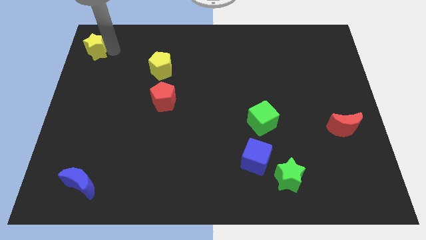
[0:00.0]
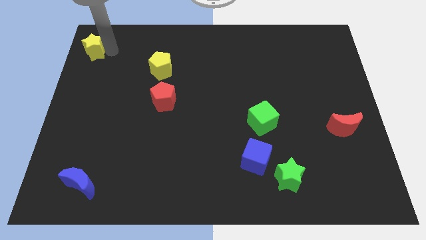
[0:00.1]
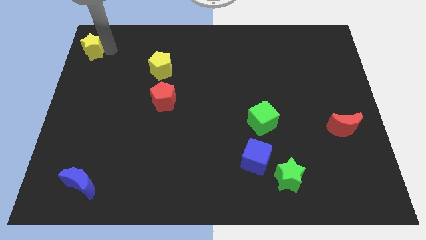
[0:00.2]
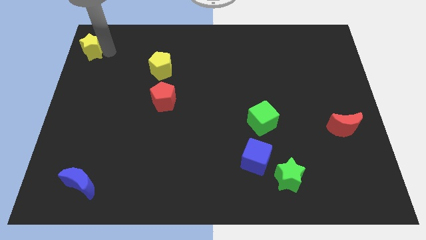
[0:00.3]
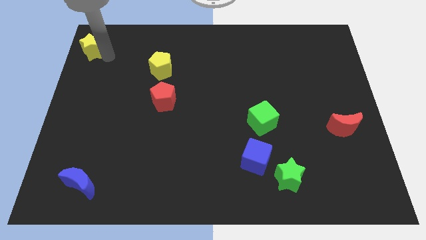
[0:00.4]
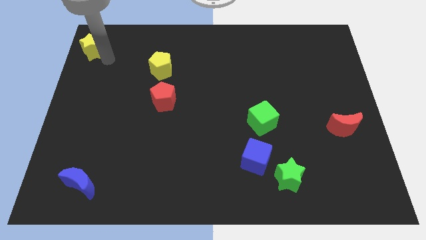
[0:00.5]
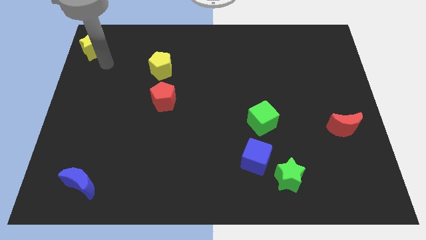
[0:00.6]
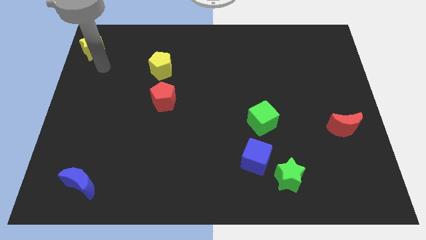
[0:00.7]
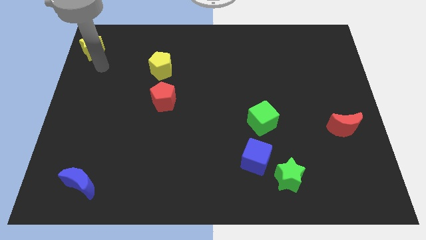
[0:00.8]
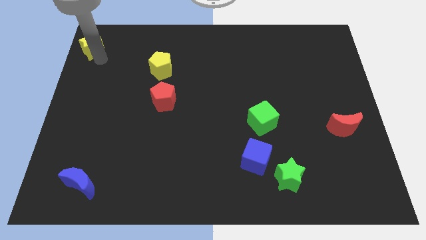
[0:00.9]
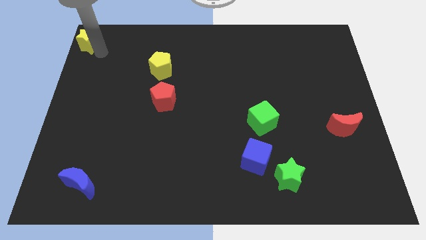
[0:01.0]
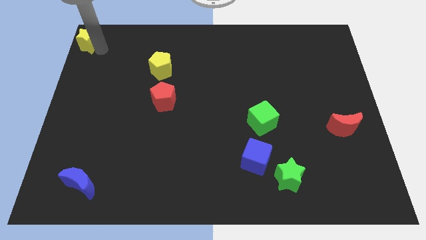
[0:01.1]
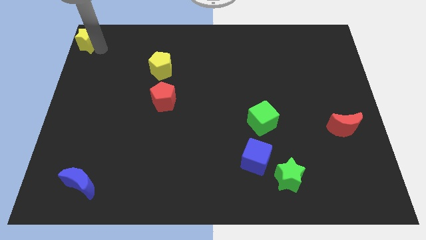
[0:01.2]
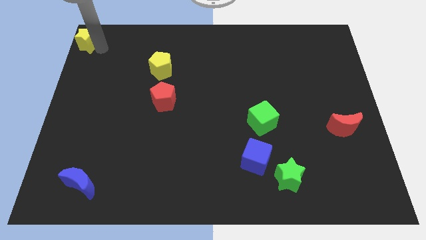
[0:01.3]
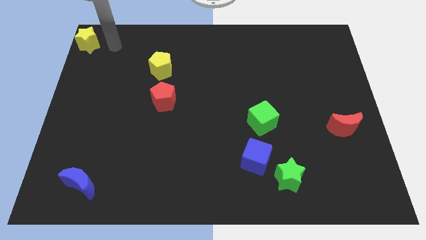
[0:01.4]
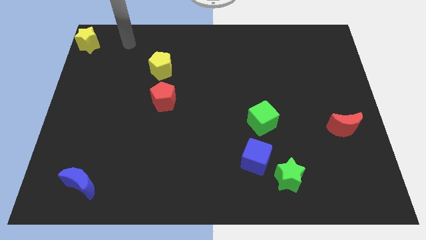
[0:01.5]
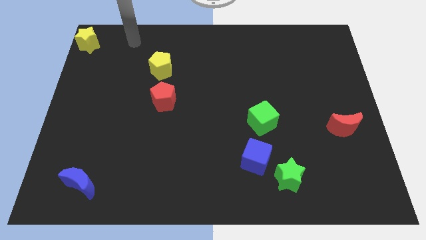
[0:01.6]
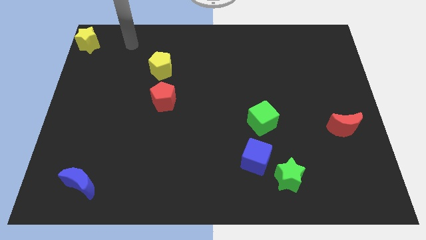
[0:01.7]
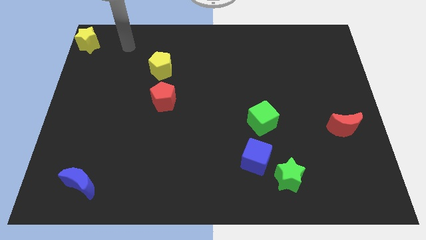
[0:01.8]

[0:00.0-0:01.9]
move yellow star to the top left corner of the board

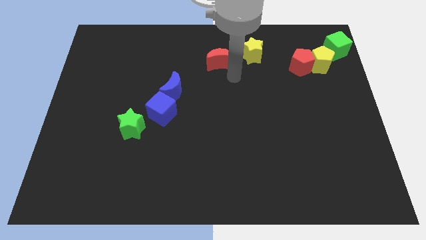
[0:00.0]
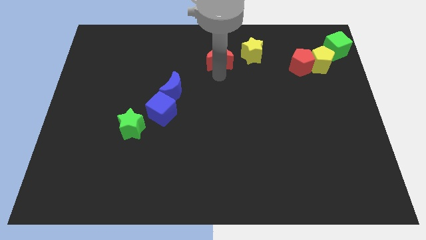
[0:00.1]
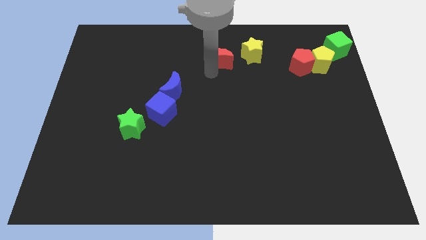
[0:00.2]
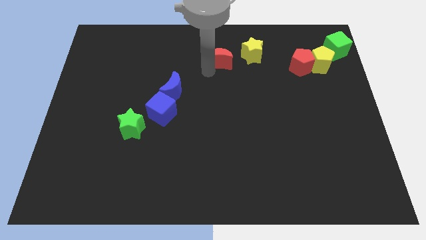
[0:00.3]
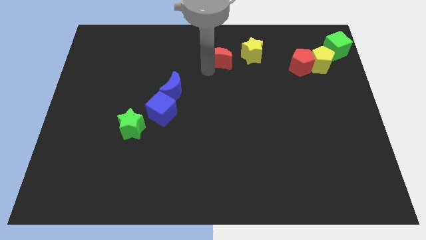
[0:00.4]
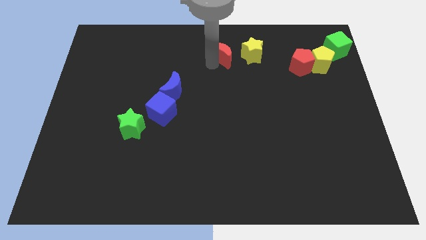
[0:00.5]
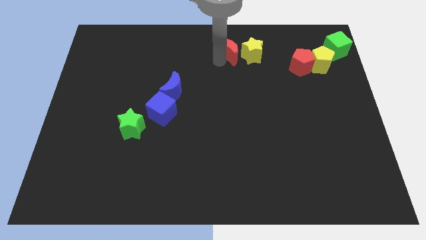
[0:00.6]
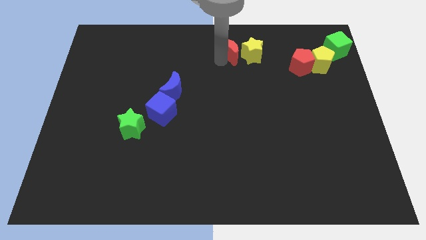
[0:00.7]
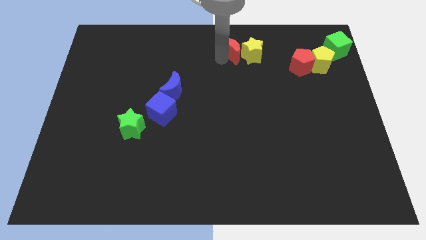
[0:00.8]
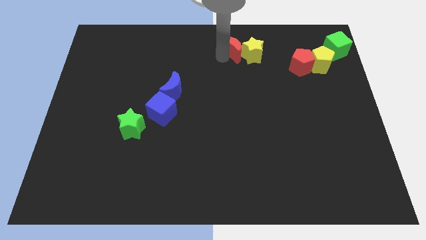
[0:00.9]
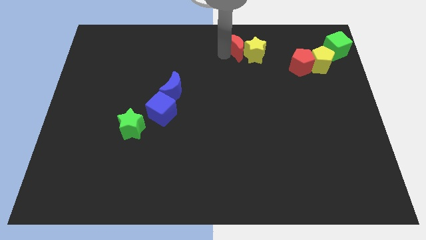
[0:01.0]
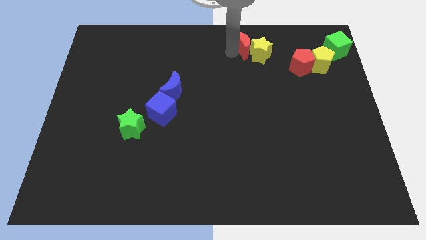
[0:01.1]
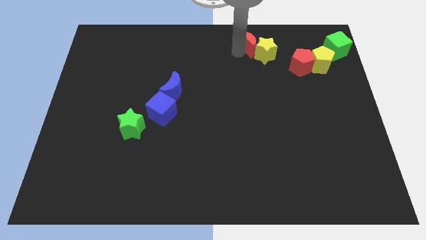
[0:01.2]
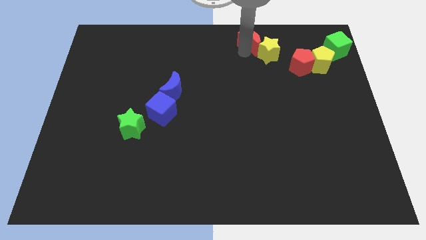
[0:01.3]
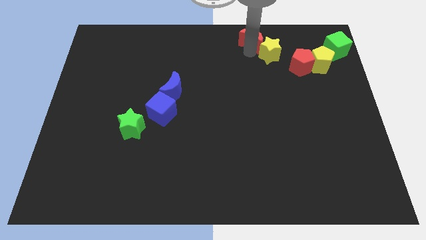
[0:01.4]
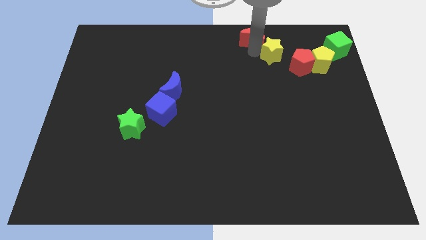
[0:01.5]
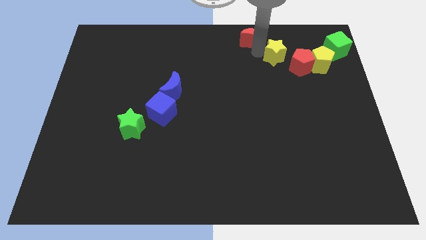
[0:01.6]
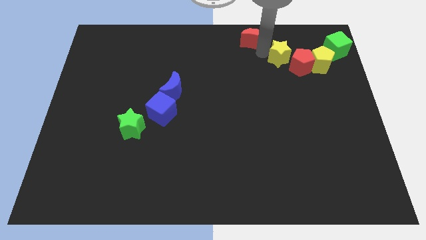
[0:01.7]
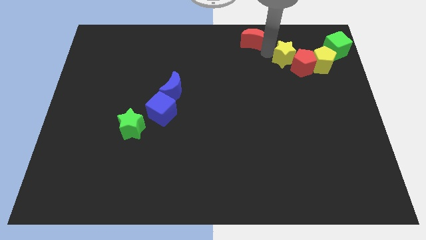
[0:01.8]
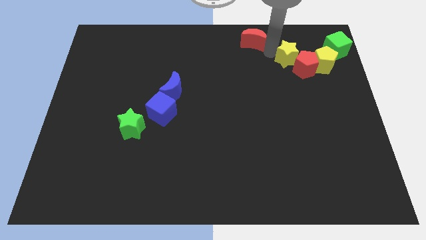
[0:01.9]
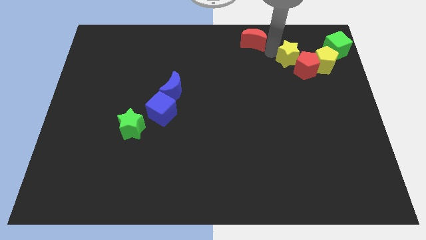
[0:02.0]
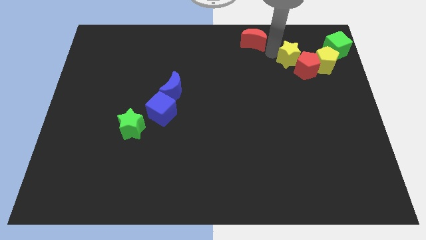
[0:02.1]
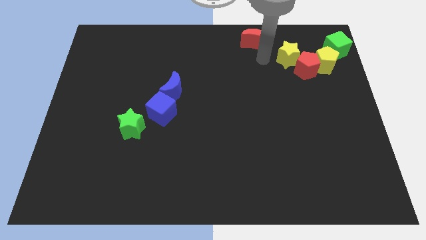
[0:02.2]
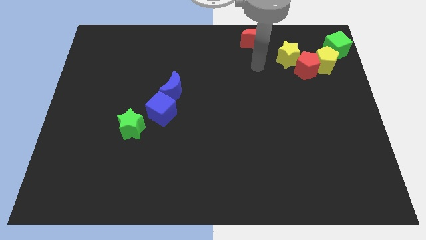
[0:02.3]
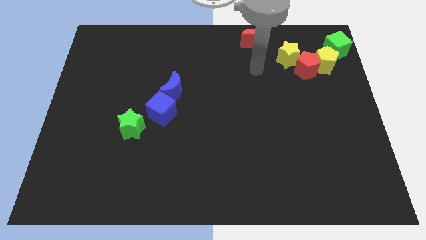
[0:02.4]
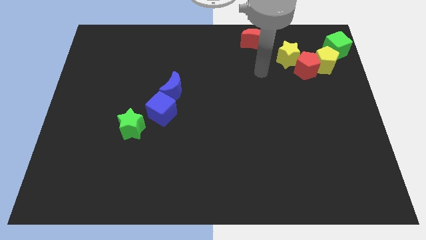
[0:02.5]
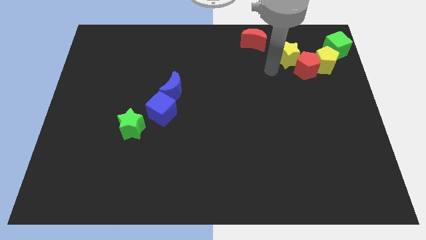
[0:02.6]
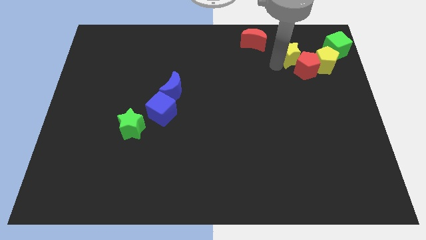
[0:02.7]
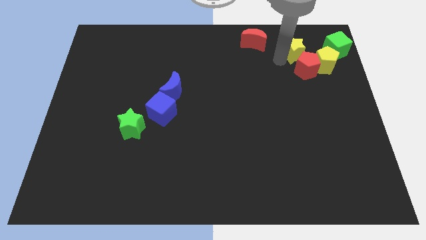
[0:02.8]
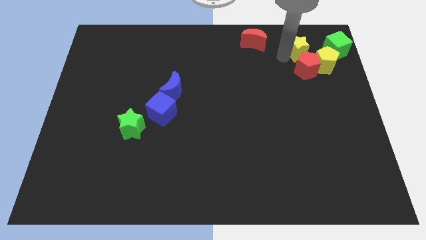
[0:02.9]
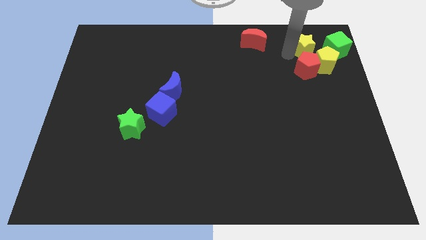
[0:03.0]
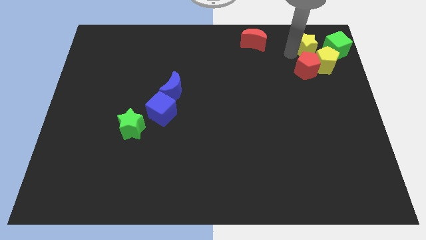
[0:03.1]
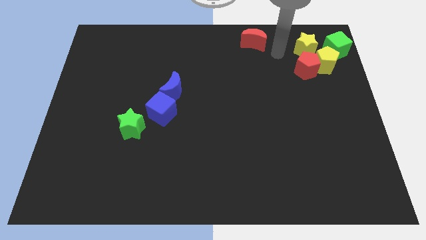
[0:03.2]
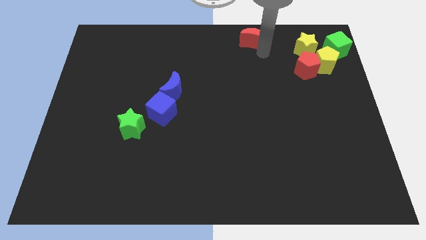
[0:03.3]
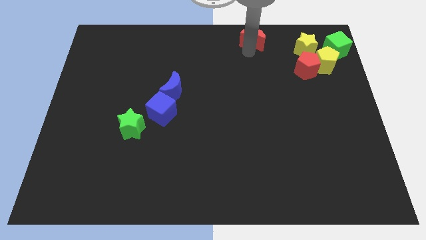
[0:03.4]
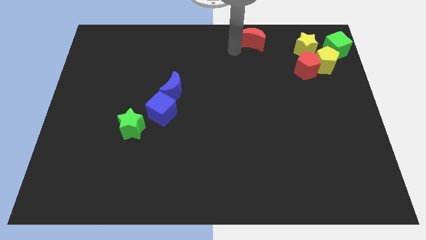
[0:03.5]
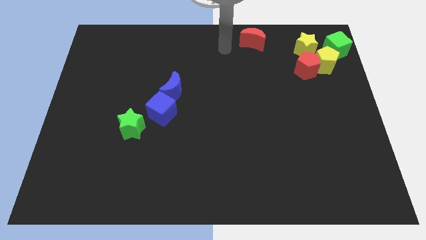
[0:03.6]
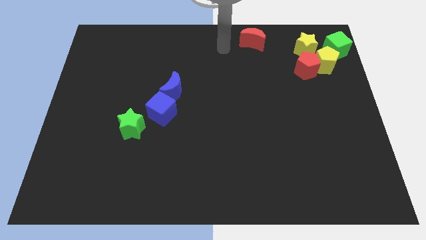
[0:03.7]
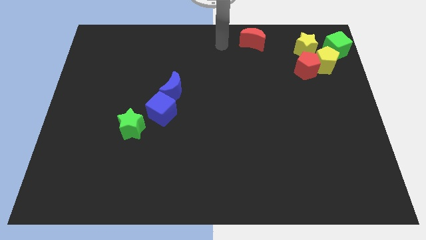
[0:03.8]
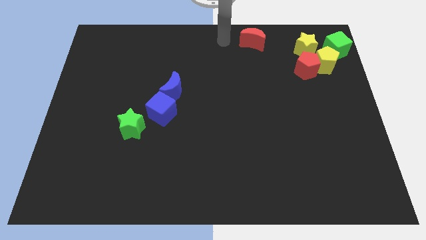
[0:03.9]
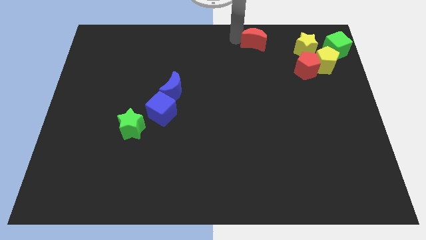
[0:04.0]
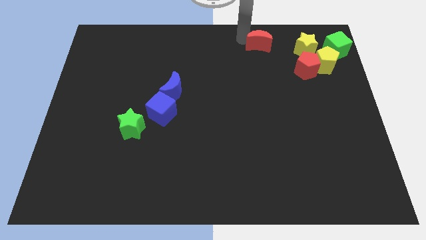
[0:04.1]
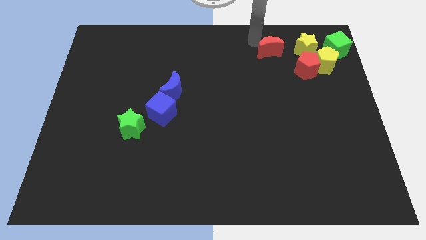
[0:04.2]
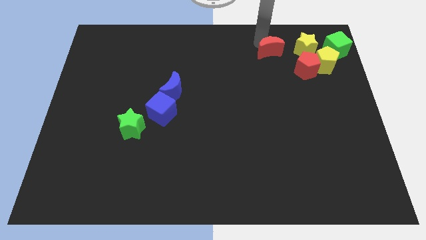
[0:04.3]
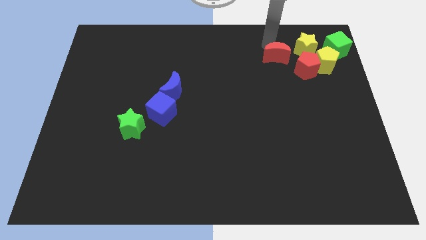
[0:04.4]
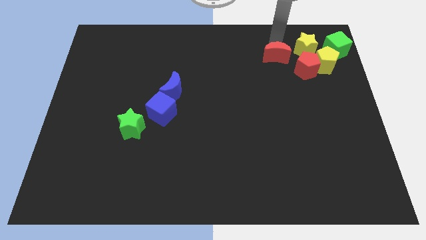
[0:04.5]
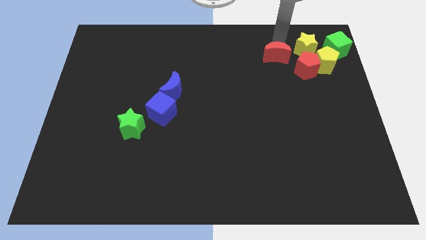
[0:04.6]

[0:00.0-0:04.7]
make a triangle with red blocks and the yellow star

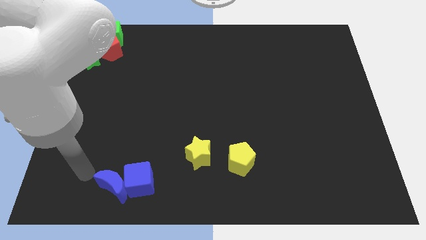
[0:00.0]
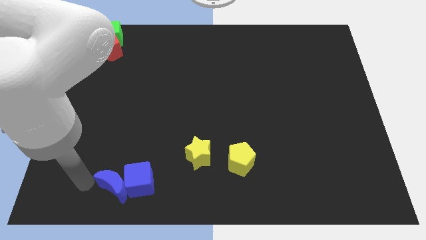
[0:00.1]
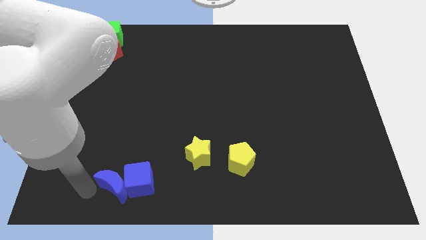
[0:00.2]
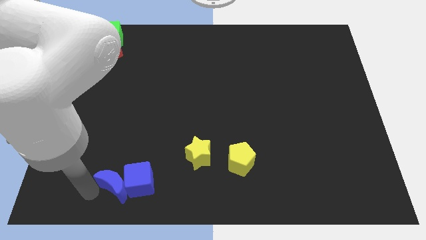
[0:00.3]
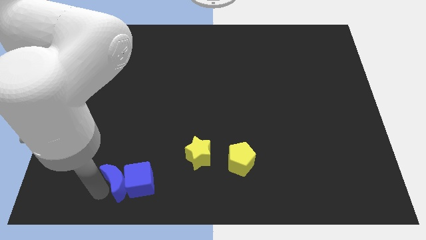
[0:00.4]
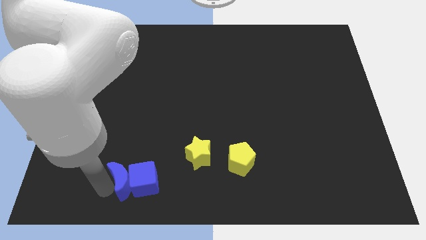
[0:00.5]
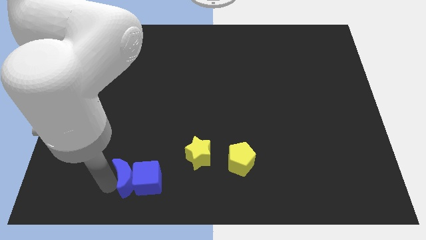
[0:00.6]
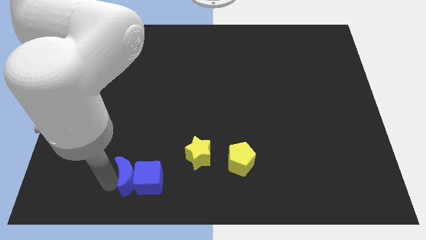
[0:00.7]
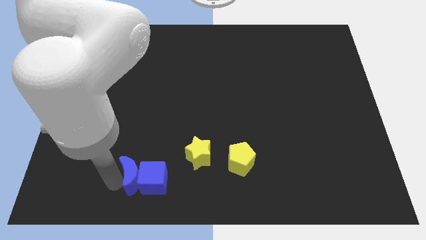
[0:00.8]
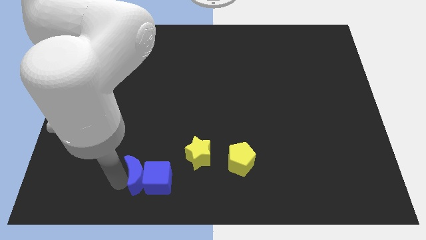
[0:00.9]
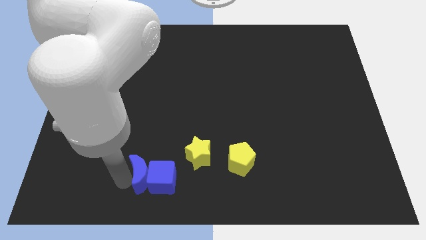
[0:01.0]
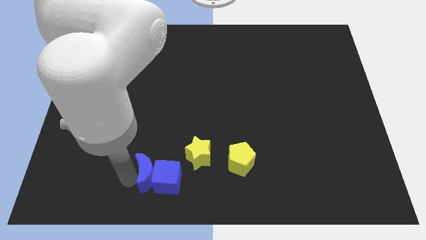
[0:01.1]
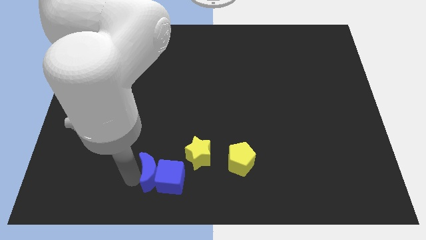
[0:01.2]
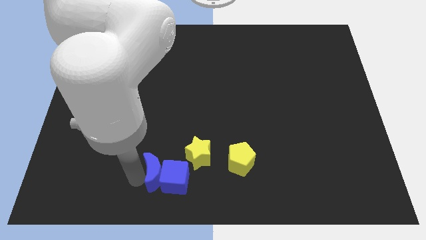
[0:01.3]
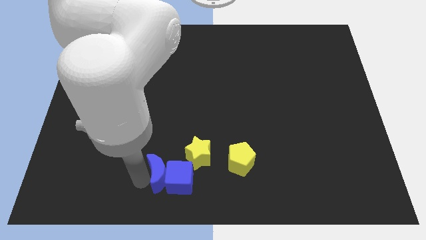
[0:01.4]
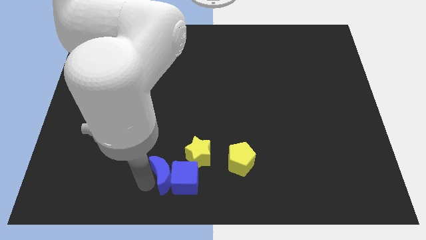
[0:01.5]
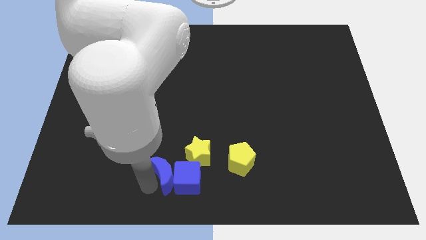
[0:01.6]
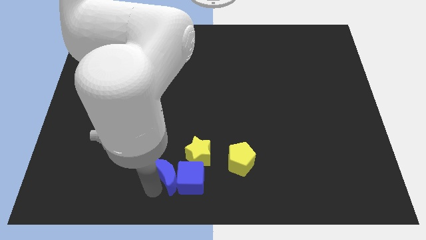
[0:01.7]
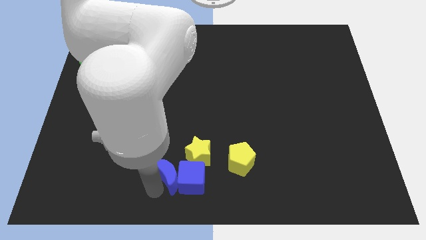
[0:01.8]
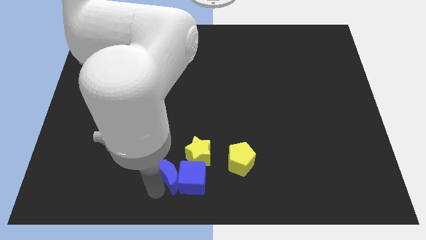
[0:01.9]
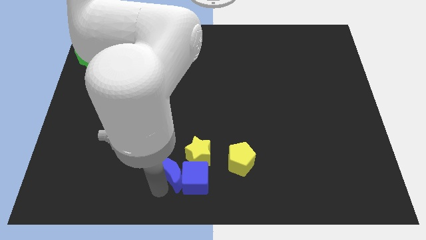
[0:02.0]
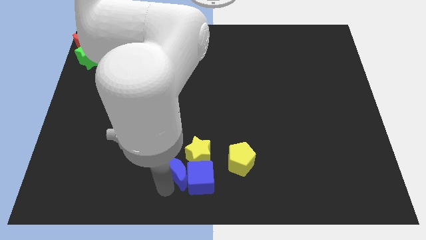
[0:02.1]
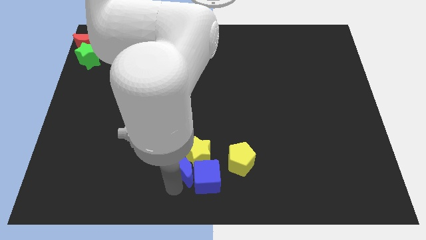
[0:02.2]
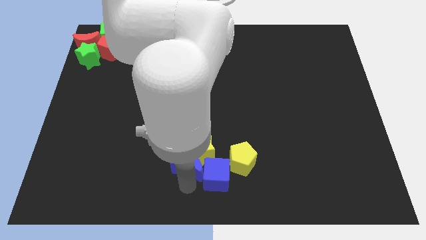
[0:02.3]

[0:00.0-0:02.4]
join blue blocks with yellow blocks at the bottom center

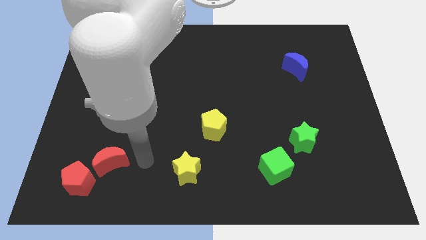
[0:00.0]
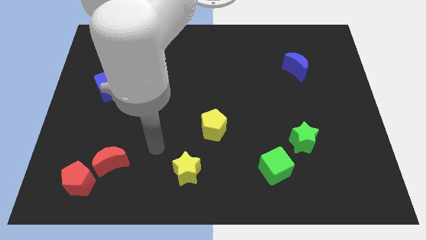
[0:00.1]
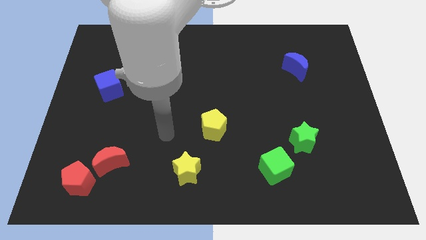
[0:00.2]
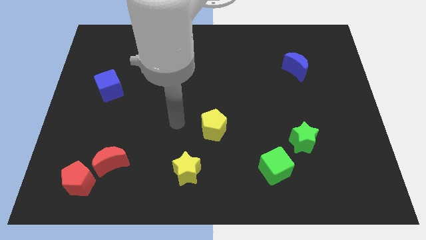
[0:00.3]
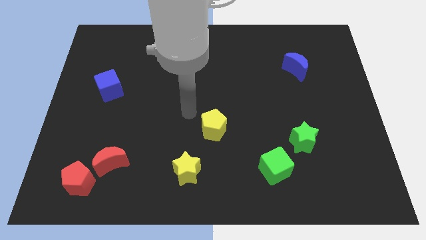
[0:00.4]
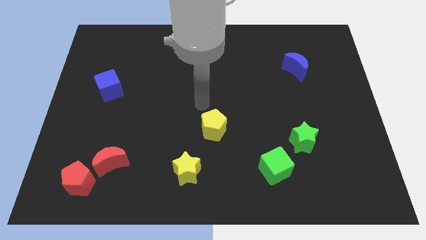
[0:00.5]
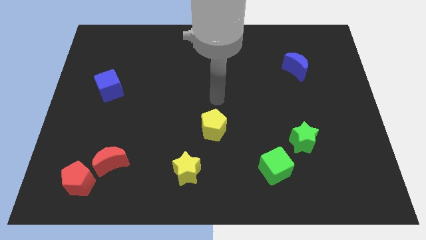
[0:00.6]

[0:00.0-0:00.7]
place the arm at the center of the board
